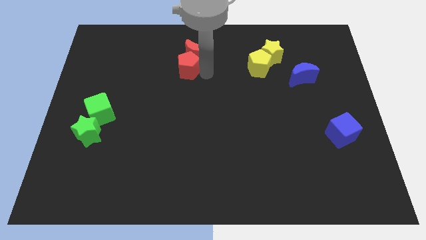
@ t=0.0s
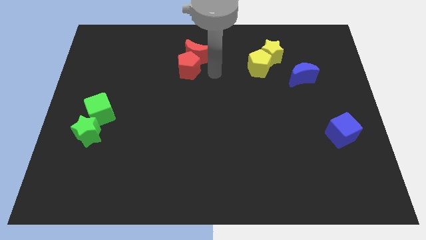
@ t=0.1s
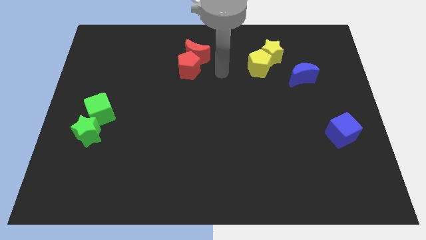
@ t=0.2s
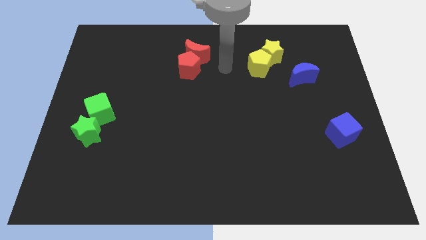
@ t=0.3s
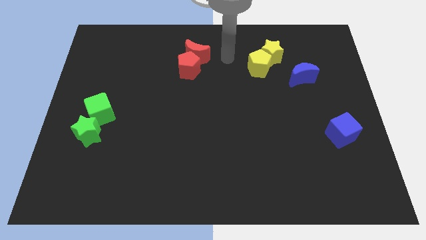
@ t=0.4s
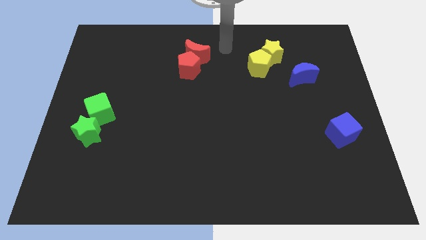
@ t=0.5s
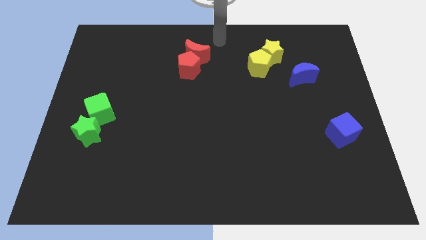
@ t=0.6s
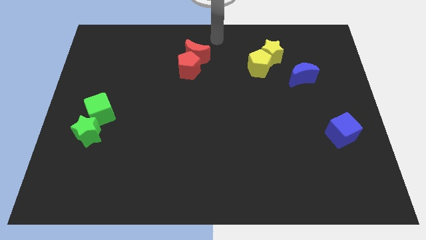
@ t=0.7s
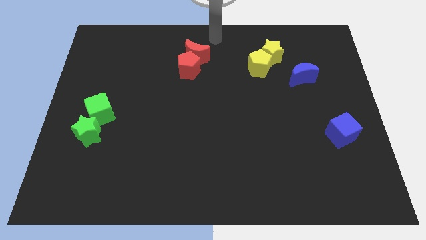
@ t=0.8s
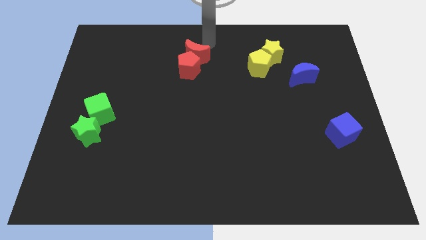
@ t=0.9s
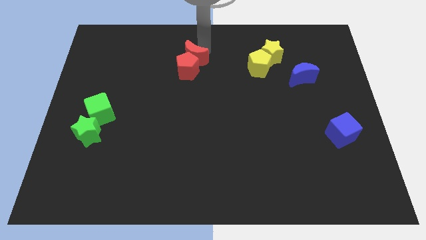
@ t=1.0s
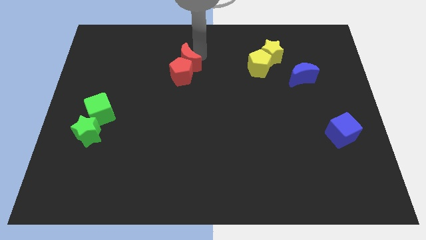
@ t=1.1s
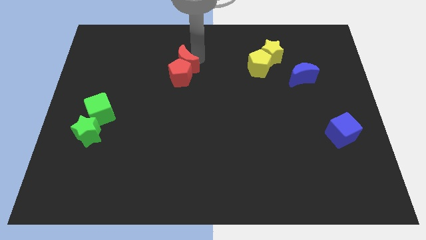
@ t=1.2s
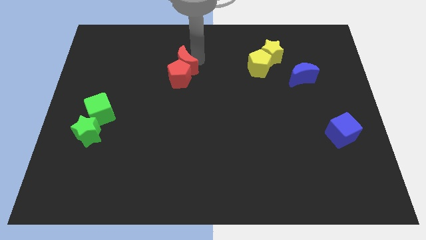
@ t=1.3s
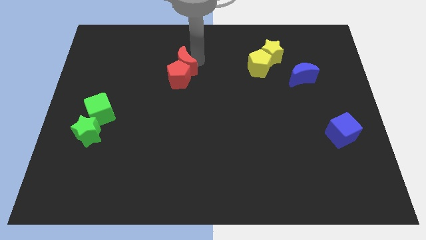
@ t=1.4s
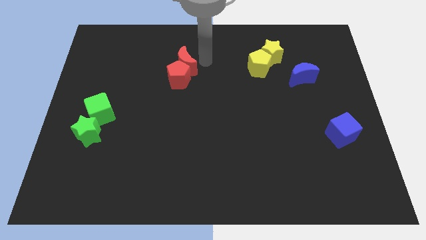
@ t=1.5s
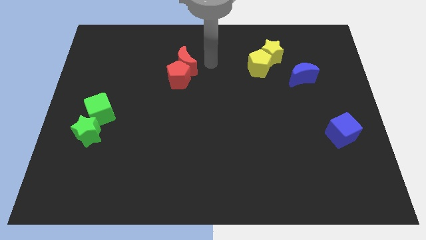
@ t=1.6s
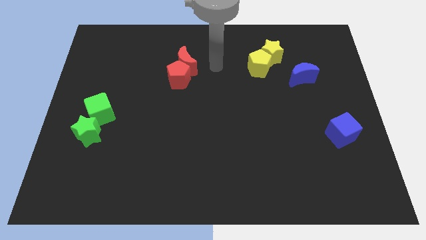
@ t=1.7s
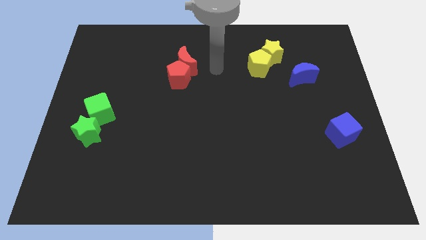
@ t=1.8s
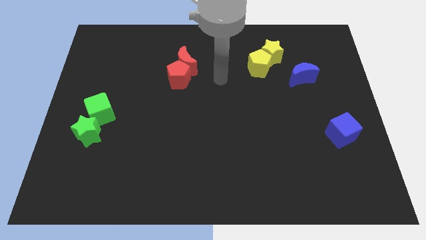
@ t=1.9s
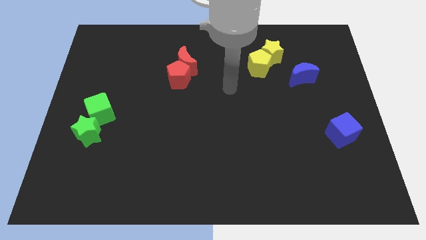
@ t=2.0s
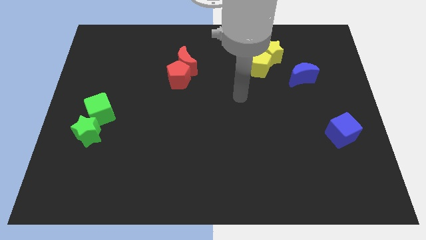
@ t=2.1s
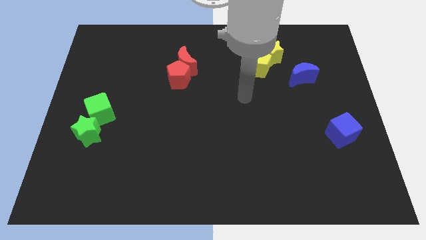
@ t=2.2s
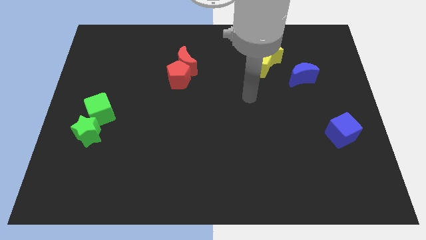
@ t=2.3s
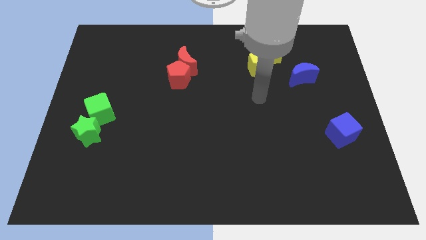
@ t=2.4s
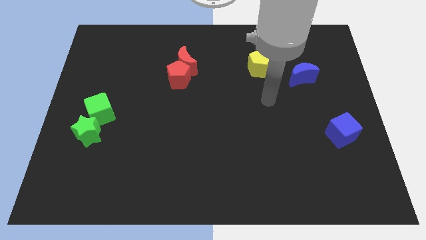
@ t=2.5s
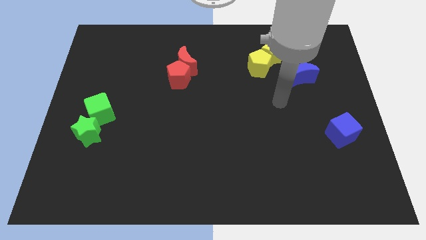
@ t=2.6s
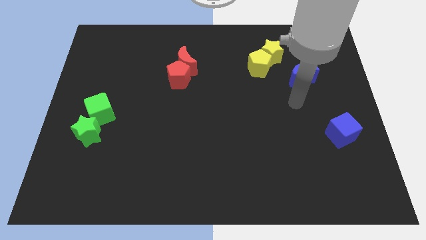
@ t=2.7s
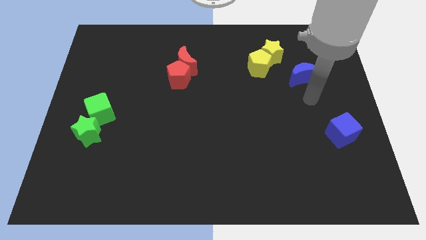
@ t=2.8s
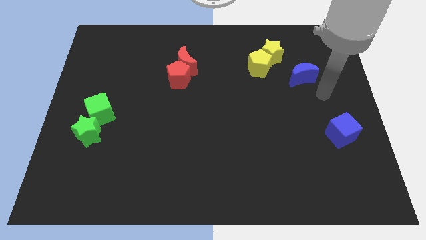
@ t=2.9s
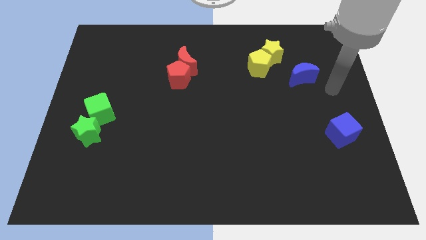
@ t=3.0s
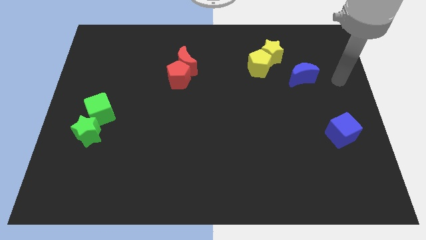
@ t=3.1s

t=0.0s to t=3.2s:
push both the red blocks slightly to the bottom side of the board

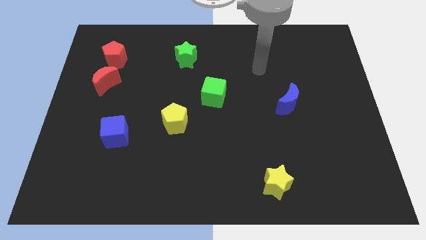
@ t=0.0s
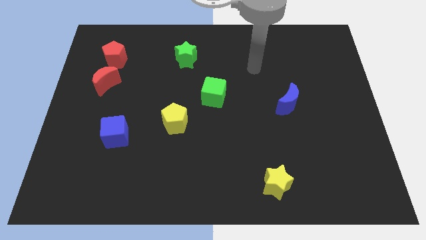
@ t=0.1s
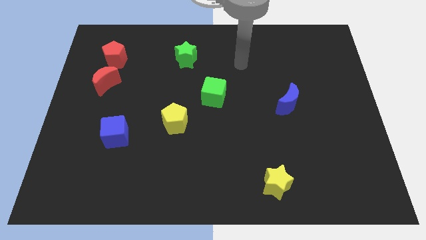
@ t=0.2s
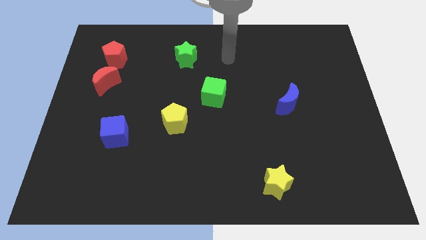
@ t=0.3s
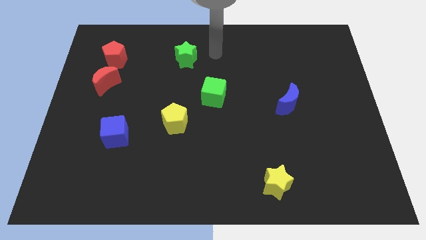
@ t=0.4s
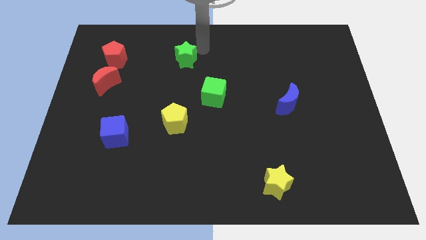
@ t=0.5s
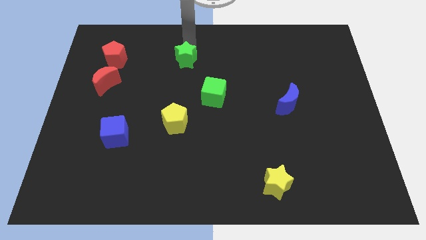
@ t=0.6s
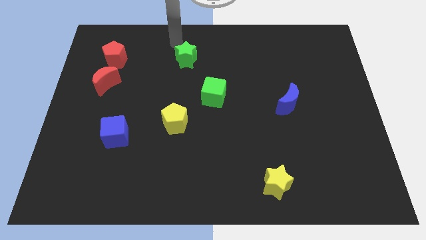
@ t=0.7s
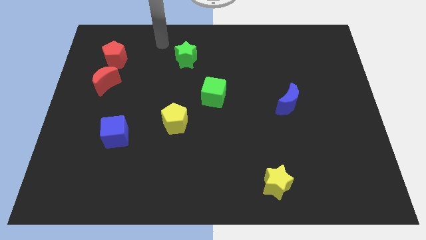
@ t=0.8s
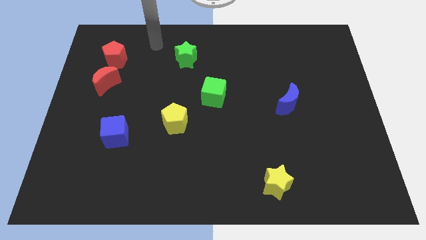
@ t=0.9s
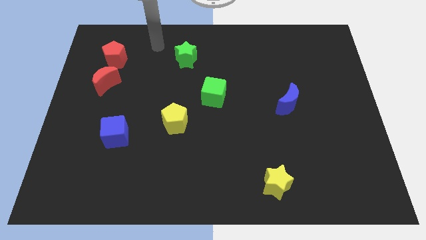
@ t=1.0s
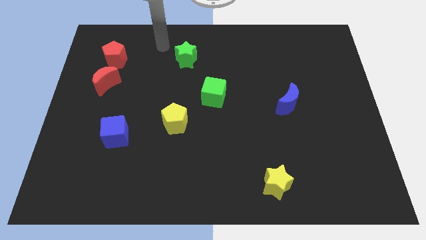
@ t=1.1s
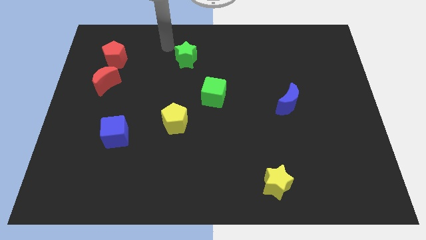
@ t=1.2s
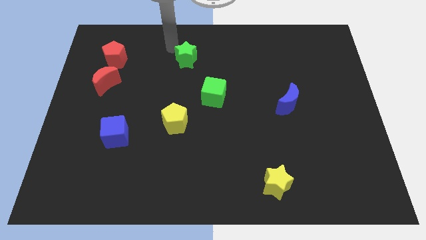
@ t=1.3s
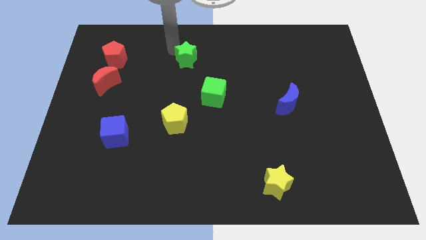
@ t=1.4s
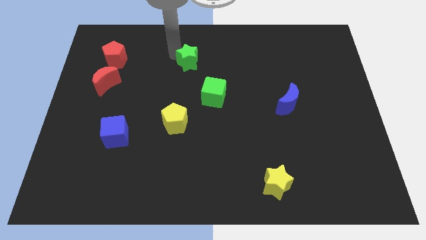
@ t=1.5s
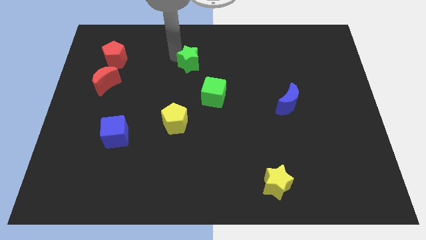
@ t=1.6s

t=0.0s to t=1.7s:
move close to the green star

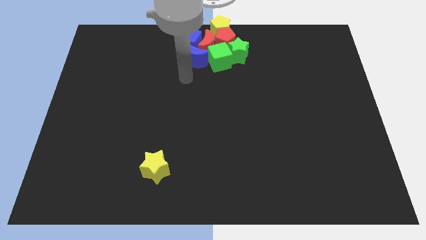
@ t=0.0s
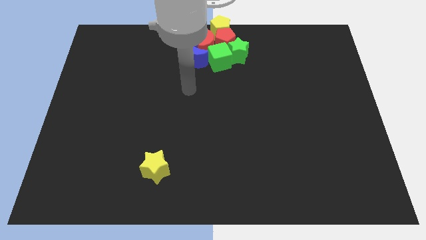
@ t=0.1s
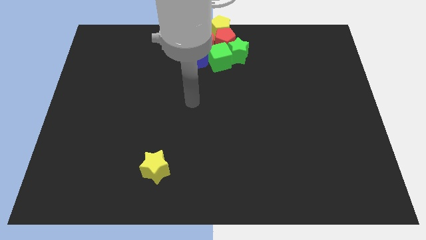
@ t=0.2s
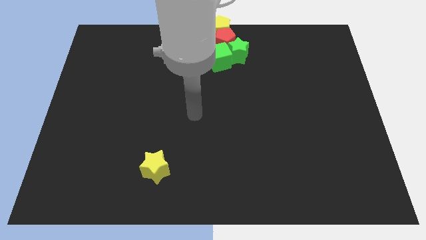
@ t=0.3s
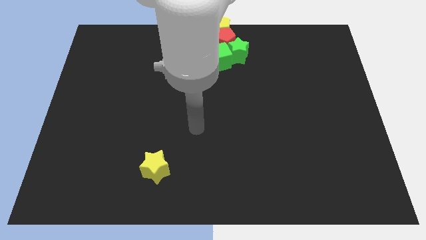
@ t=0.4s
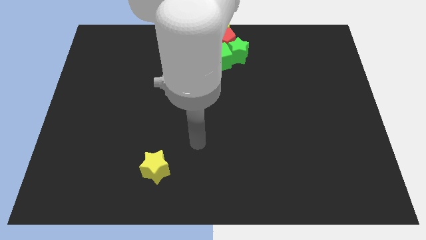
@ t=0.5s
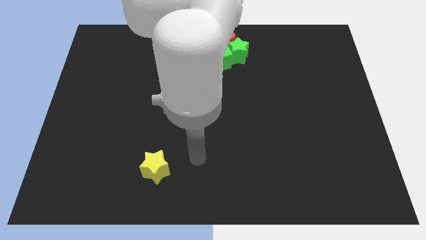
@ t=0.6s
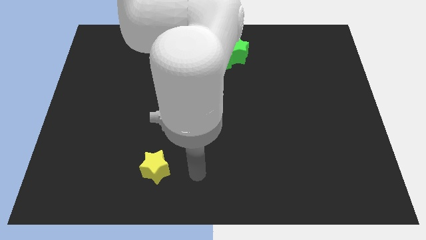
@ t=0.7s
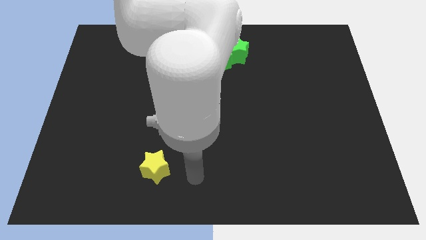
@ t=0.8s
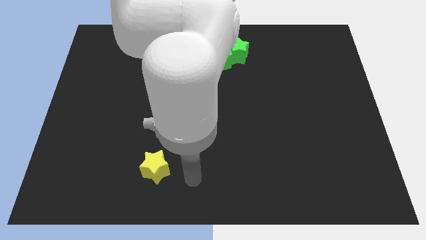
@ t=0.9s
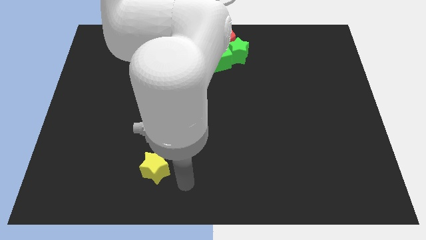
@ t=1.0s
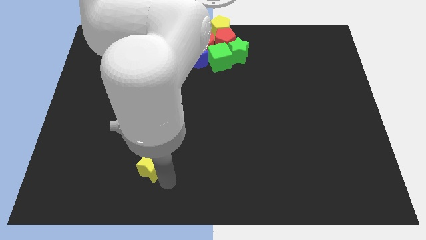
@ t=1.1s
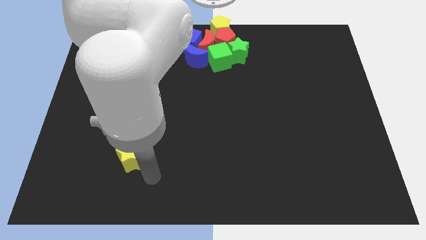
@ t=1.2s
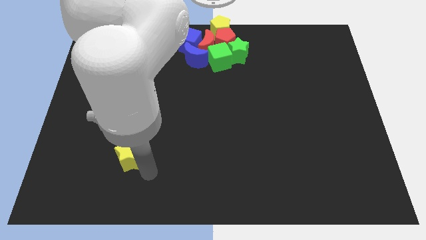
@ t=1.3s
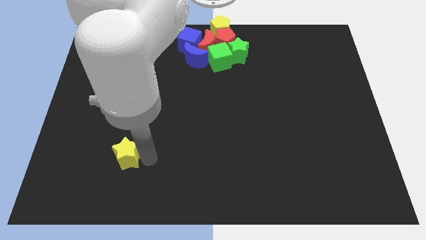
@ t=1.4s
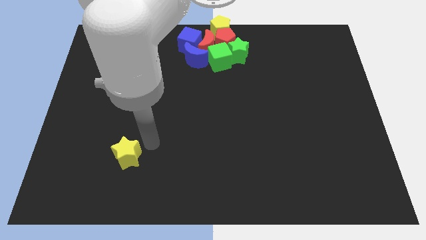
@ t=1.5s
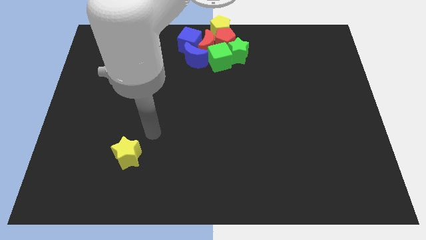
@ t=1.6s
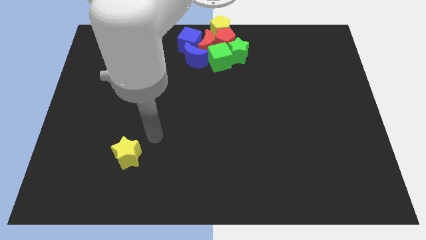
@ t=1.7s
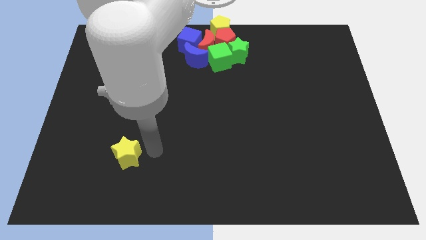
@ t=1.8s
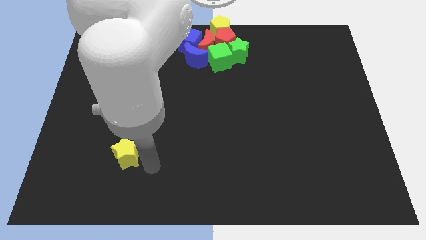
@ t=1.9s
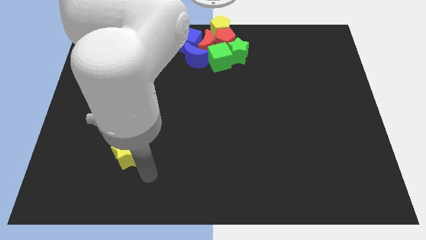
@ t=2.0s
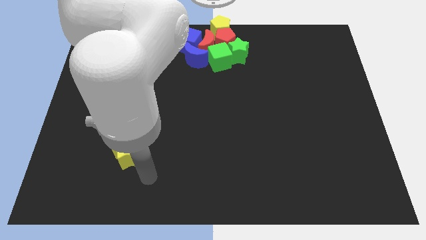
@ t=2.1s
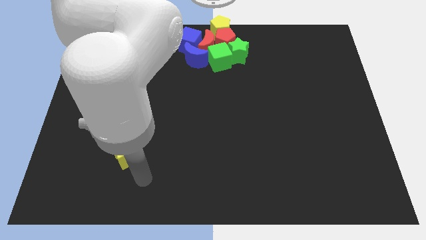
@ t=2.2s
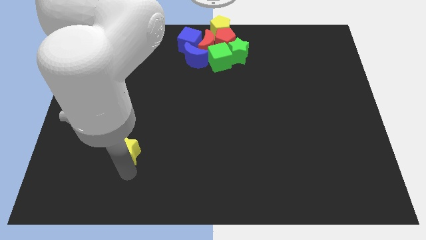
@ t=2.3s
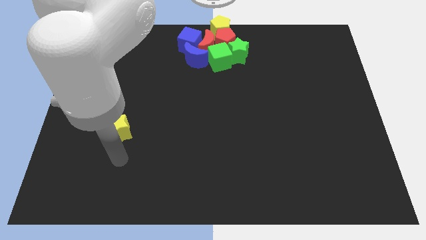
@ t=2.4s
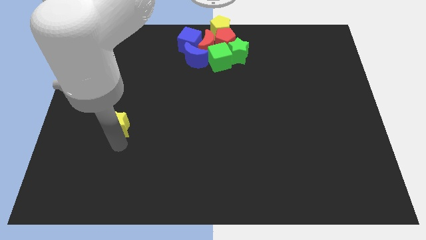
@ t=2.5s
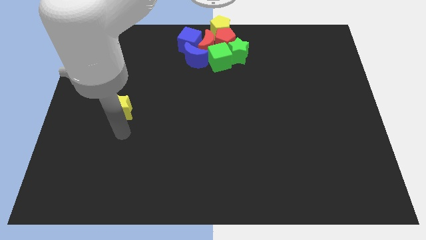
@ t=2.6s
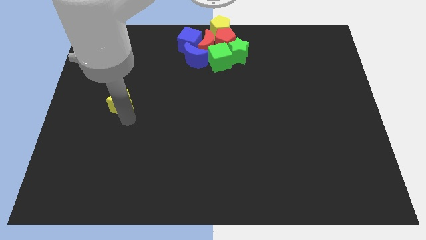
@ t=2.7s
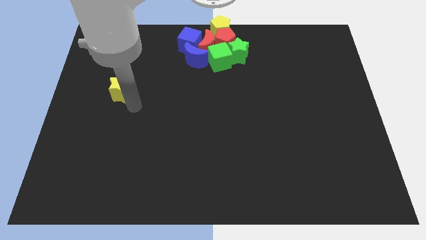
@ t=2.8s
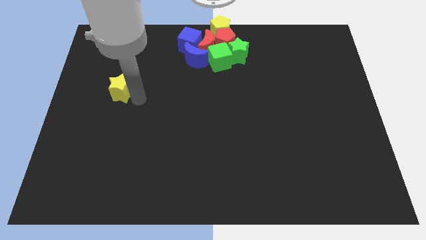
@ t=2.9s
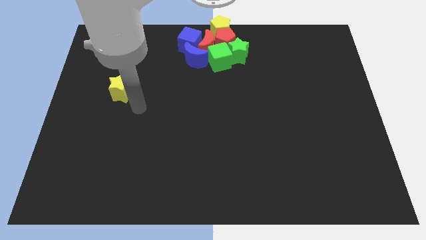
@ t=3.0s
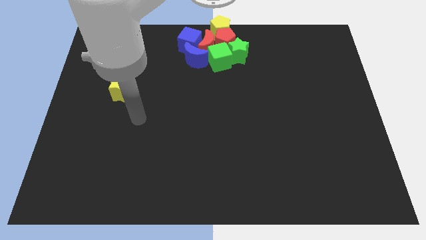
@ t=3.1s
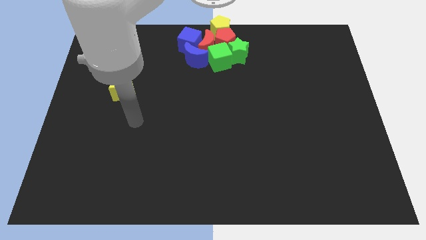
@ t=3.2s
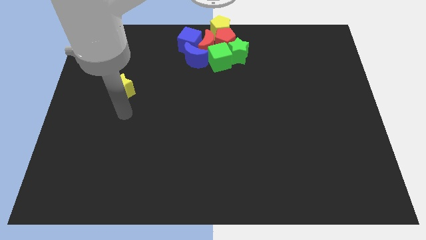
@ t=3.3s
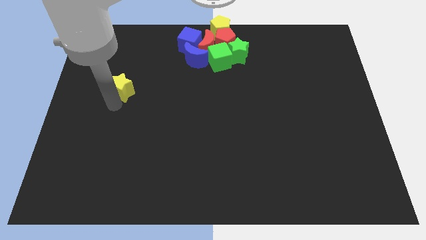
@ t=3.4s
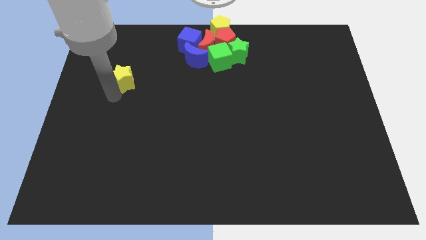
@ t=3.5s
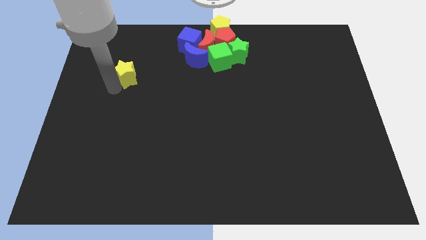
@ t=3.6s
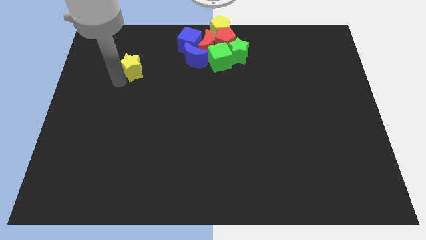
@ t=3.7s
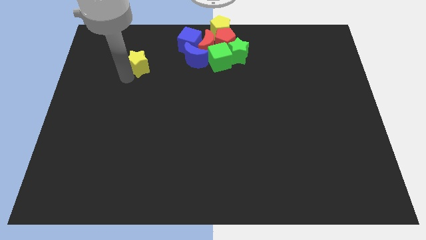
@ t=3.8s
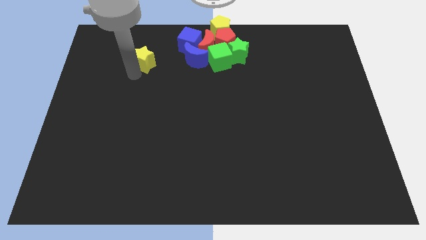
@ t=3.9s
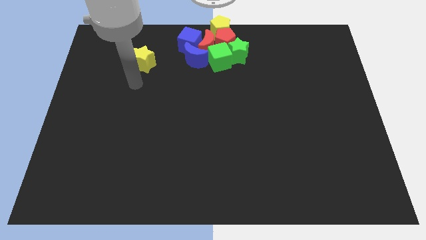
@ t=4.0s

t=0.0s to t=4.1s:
push the yellow star to the top of the board
